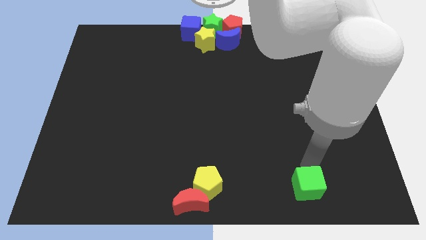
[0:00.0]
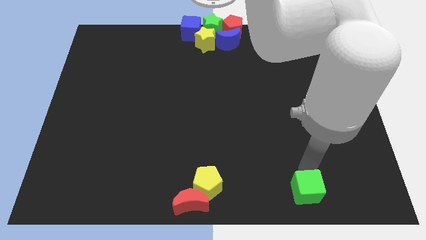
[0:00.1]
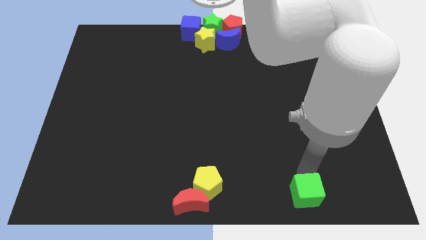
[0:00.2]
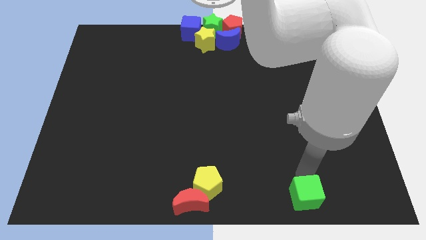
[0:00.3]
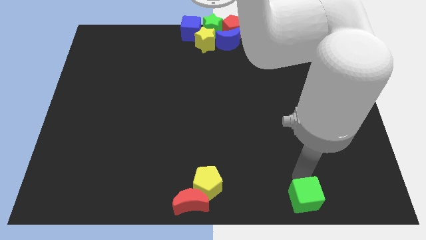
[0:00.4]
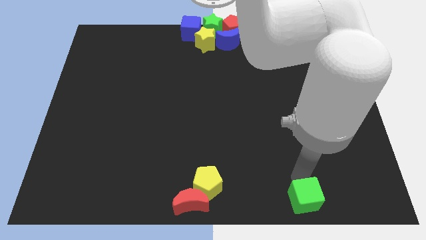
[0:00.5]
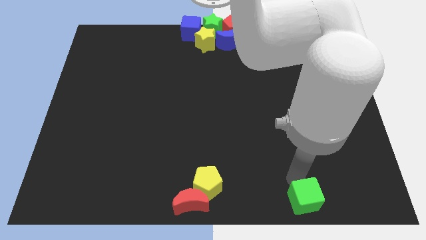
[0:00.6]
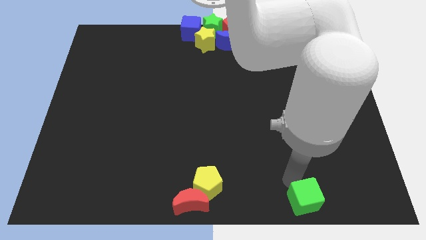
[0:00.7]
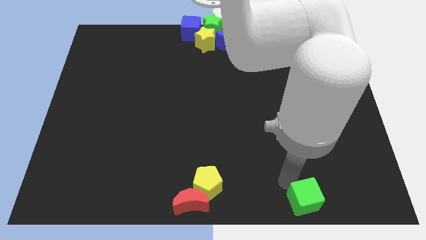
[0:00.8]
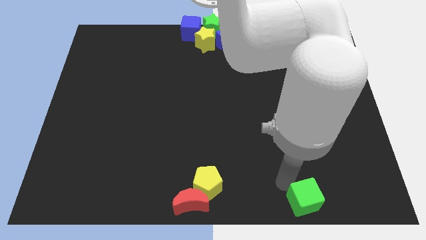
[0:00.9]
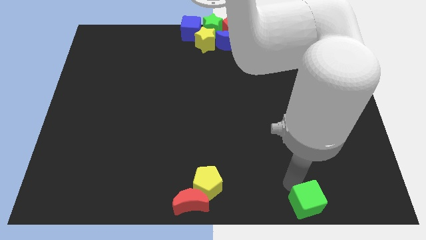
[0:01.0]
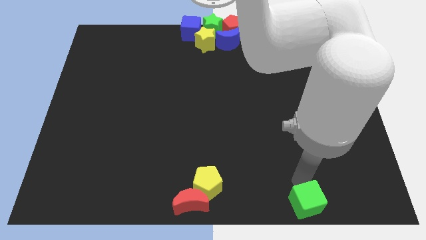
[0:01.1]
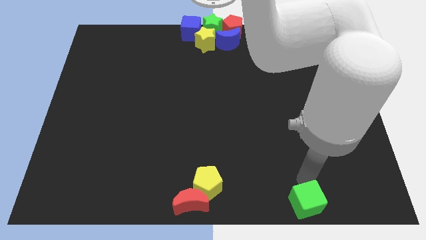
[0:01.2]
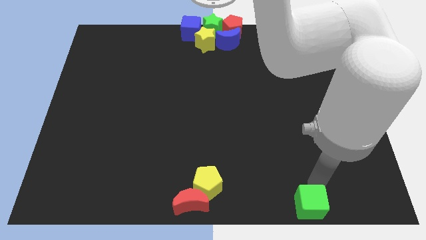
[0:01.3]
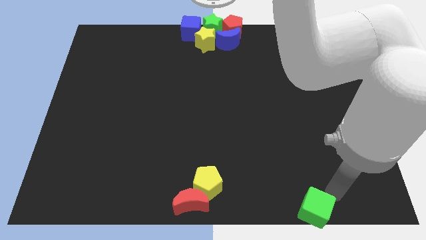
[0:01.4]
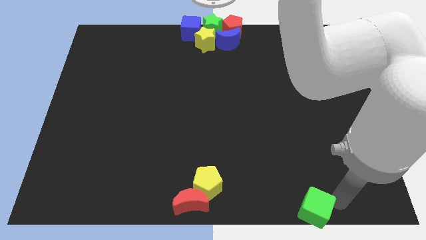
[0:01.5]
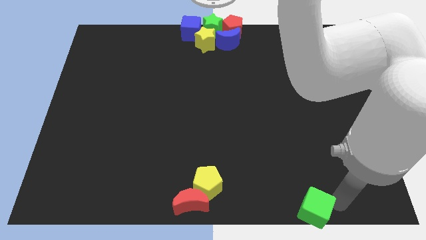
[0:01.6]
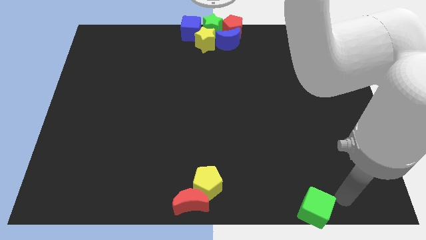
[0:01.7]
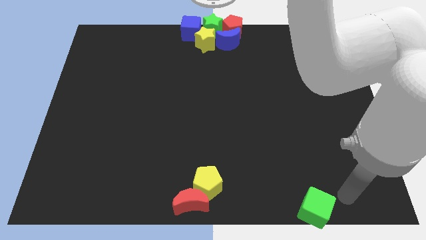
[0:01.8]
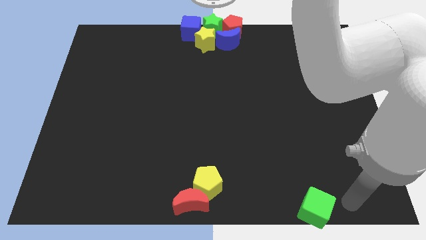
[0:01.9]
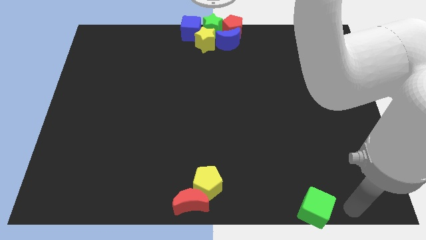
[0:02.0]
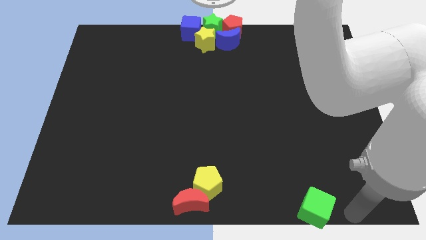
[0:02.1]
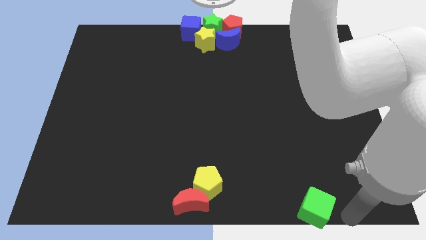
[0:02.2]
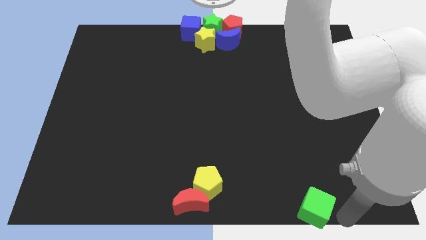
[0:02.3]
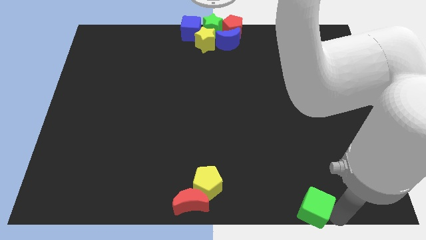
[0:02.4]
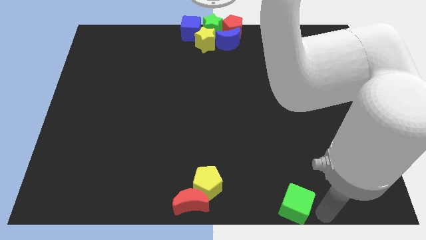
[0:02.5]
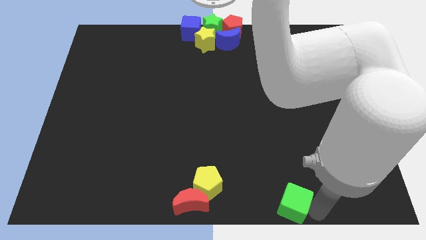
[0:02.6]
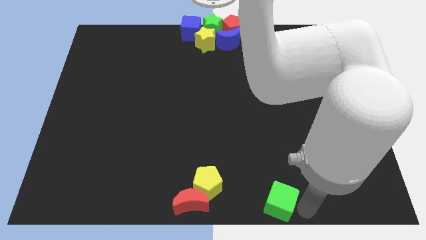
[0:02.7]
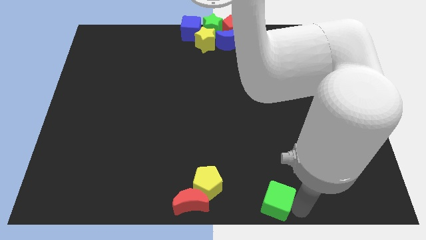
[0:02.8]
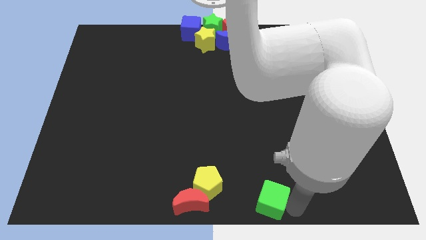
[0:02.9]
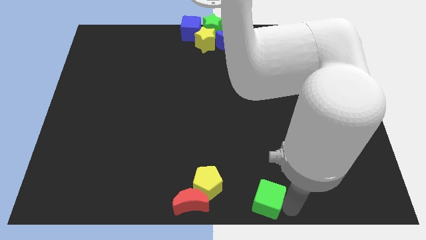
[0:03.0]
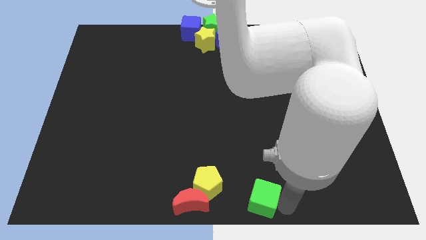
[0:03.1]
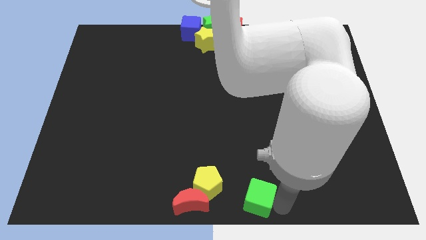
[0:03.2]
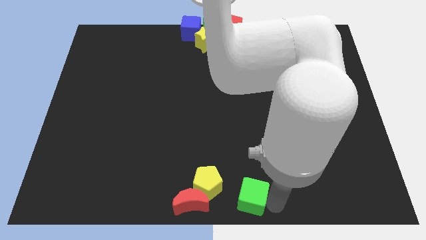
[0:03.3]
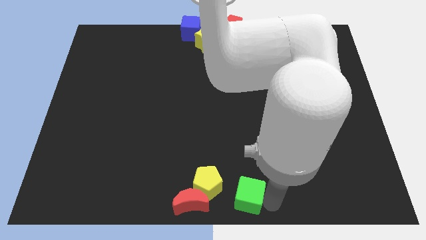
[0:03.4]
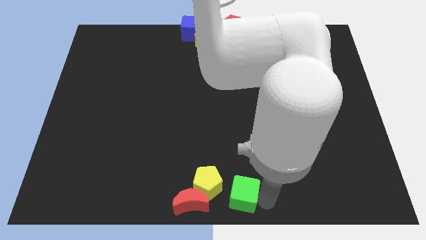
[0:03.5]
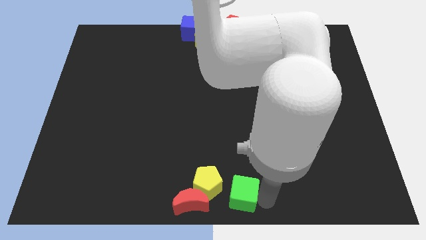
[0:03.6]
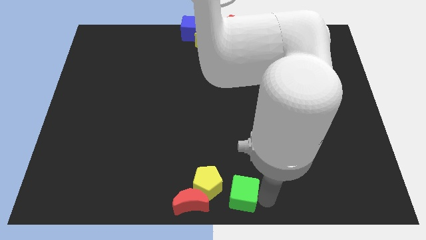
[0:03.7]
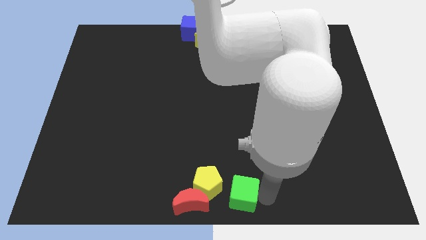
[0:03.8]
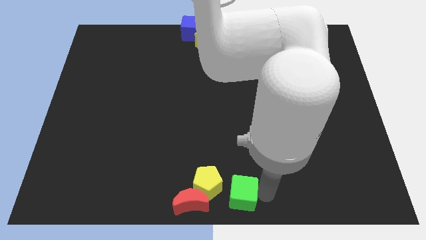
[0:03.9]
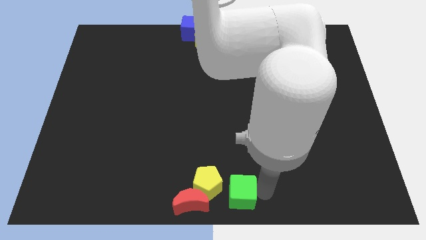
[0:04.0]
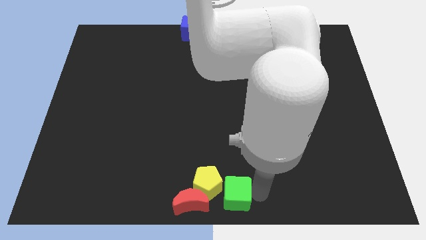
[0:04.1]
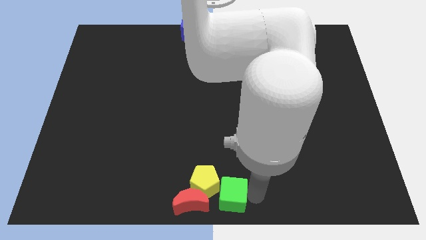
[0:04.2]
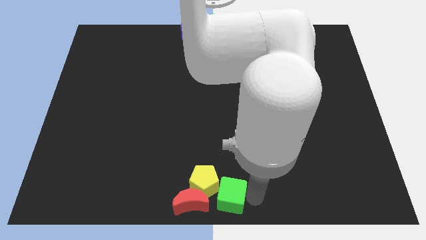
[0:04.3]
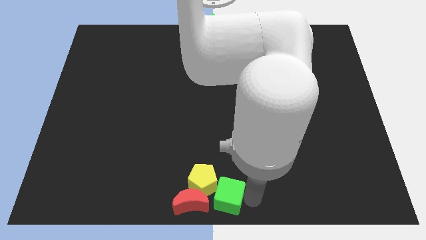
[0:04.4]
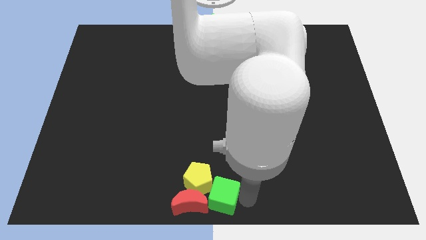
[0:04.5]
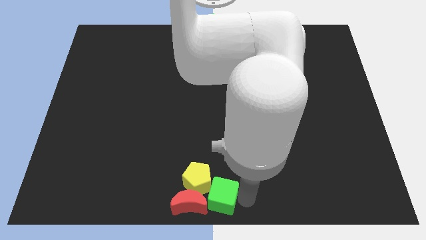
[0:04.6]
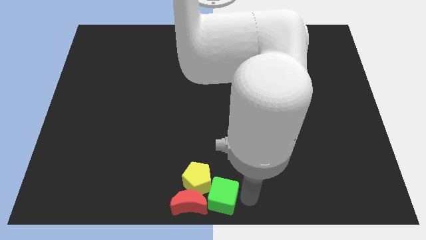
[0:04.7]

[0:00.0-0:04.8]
push green cube into yellow pentagon and red crescent

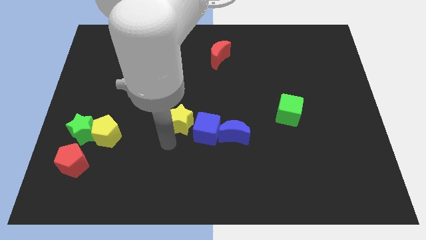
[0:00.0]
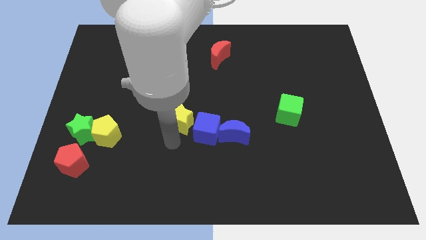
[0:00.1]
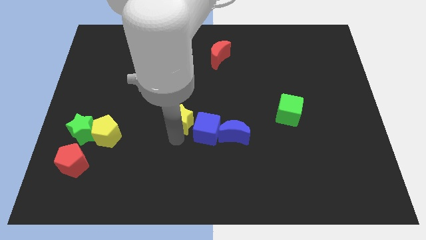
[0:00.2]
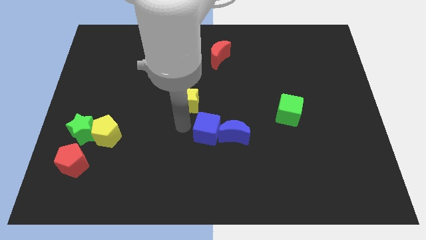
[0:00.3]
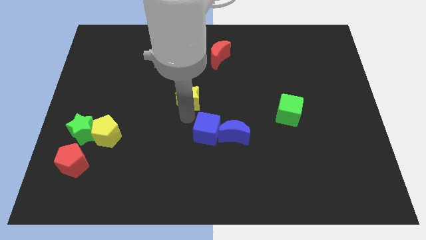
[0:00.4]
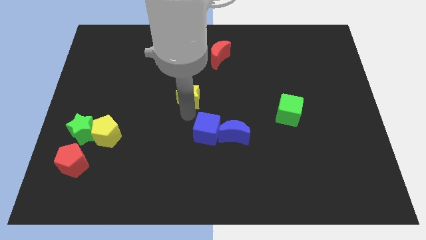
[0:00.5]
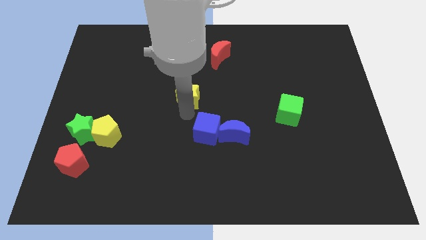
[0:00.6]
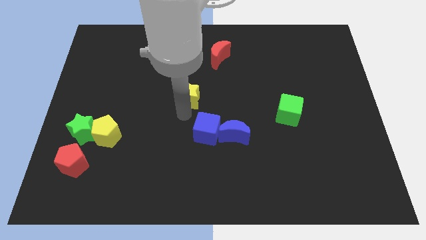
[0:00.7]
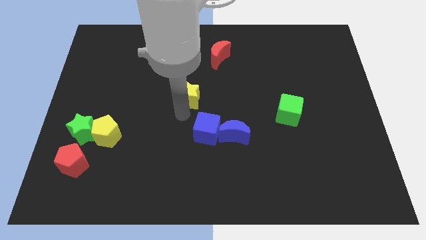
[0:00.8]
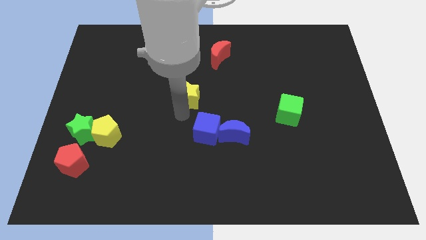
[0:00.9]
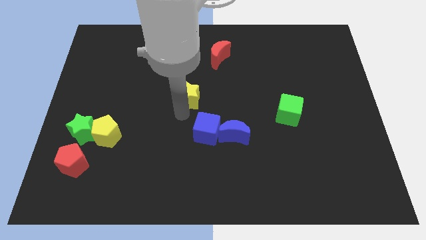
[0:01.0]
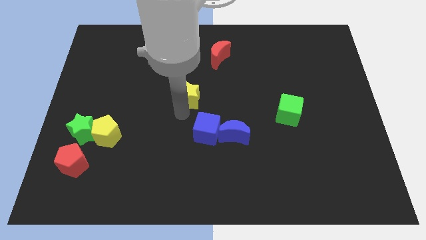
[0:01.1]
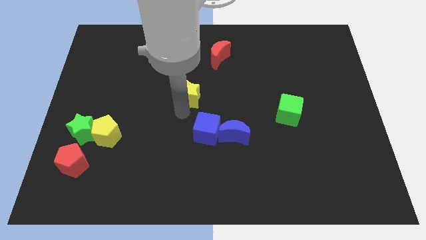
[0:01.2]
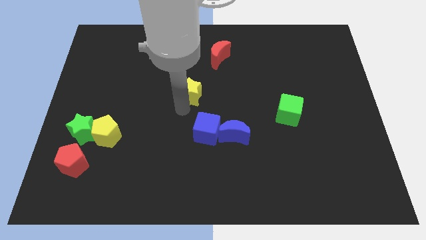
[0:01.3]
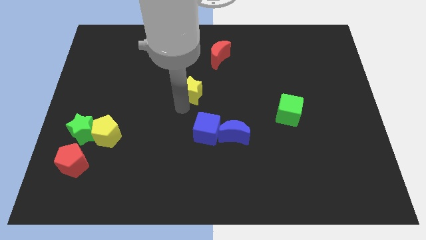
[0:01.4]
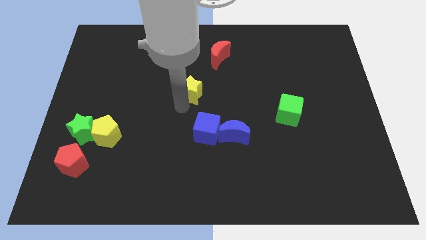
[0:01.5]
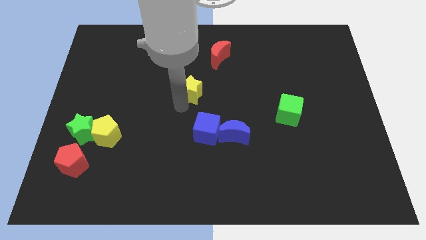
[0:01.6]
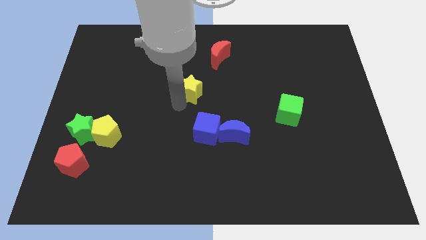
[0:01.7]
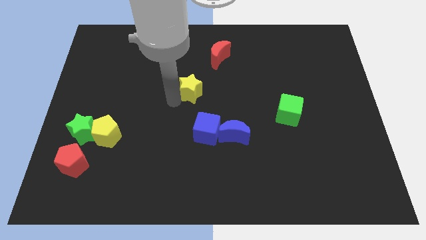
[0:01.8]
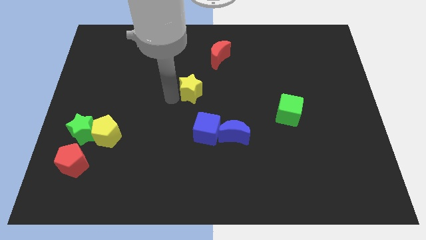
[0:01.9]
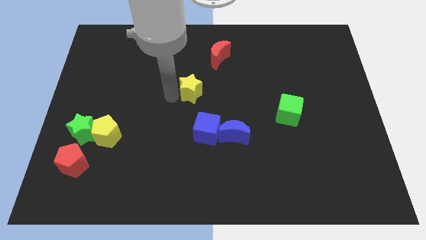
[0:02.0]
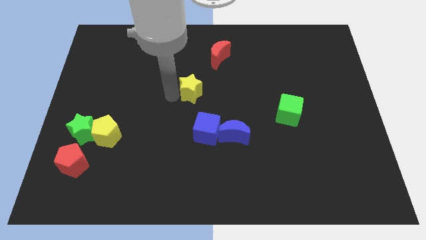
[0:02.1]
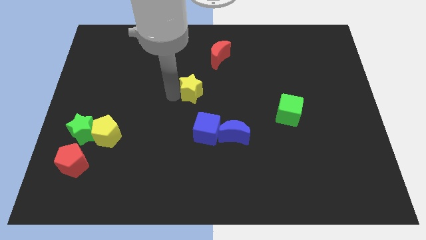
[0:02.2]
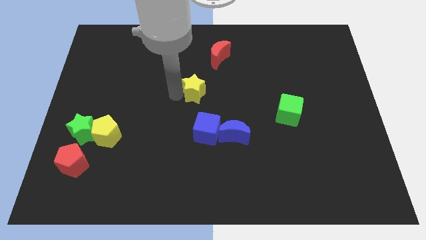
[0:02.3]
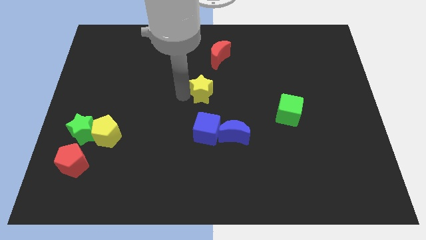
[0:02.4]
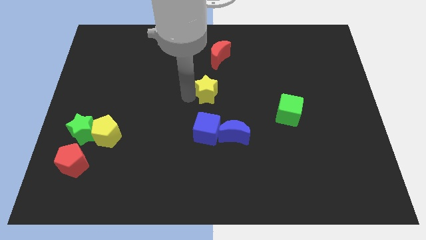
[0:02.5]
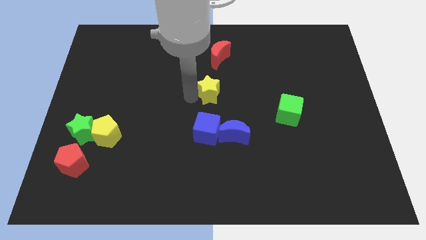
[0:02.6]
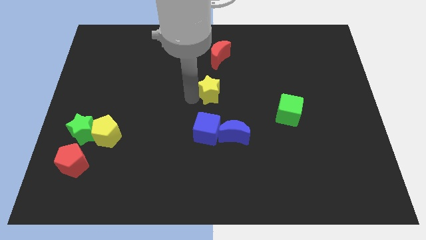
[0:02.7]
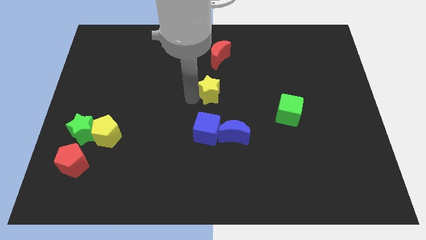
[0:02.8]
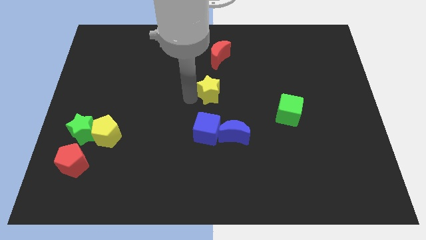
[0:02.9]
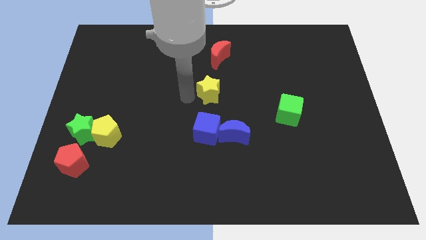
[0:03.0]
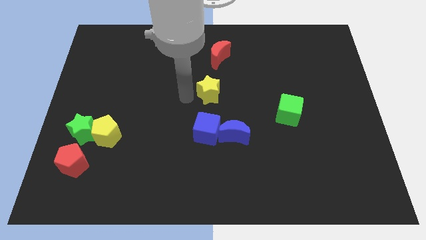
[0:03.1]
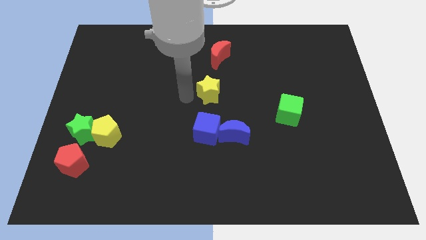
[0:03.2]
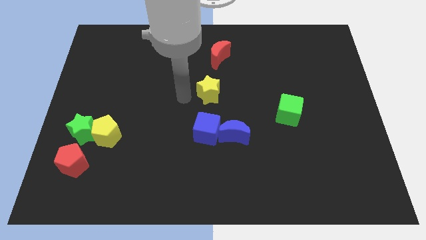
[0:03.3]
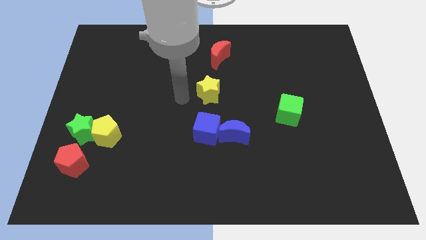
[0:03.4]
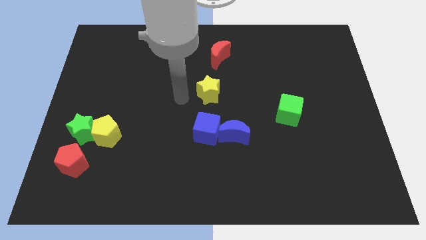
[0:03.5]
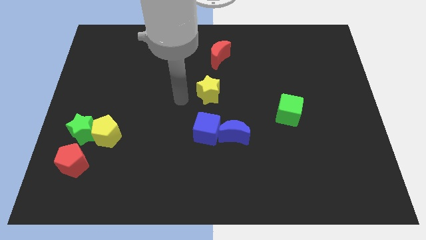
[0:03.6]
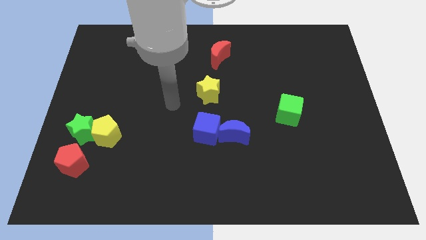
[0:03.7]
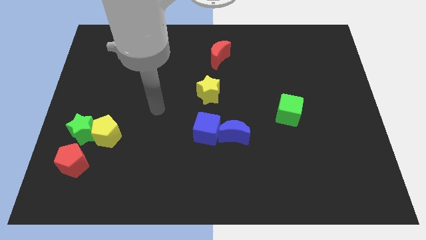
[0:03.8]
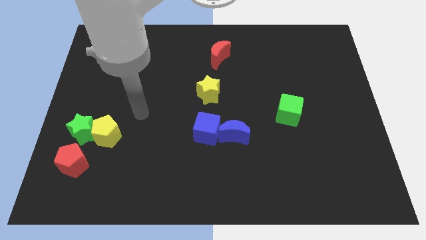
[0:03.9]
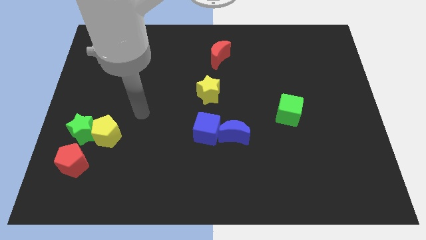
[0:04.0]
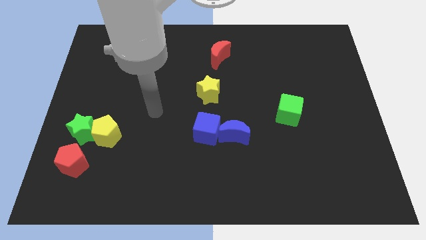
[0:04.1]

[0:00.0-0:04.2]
push the yellow star to the top of the blue cube
